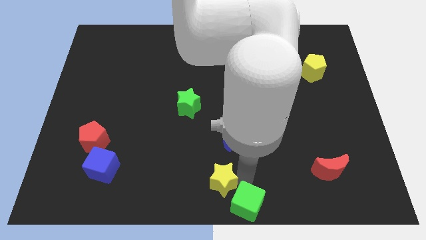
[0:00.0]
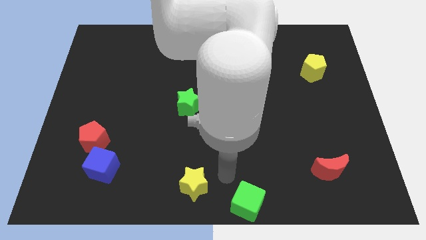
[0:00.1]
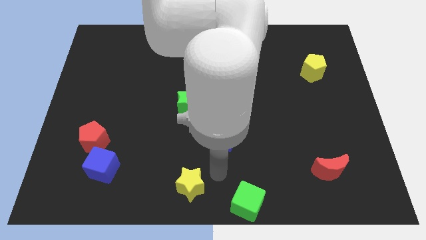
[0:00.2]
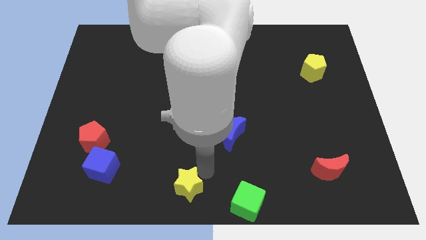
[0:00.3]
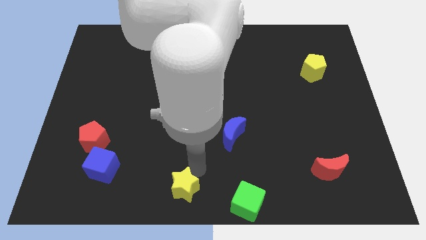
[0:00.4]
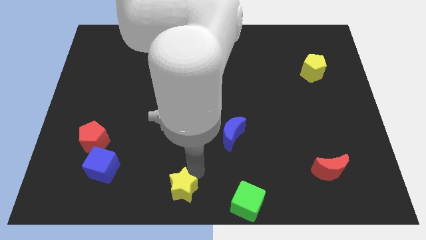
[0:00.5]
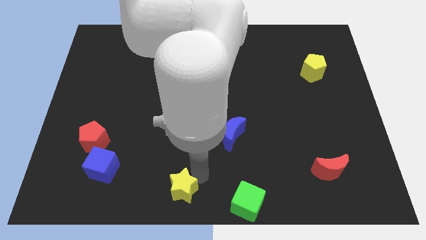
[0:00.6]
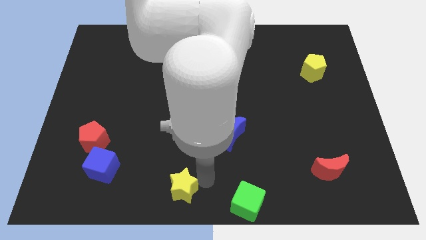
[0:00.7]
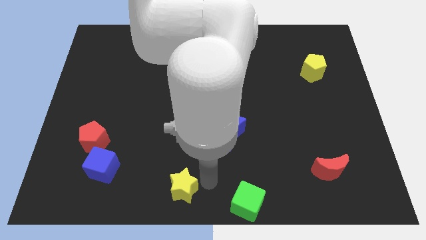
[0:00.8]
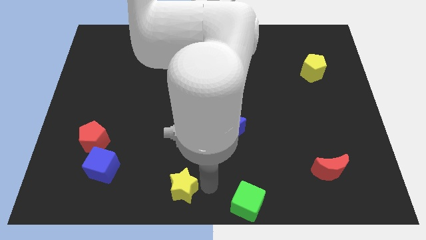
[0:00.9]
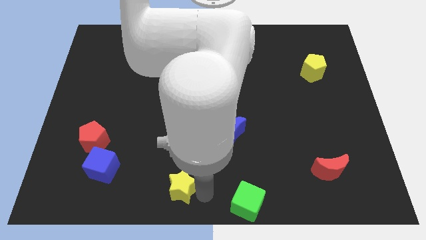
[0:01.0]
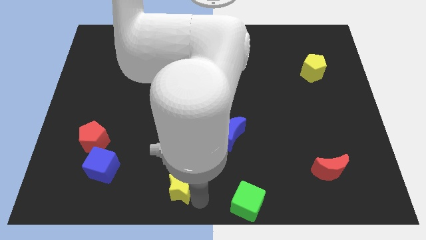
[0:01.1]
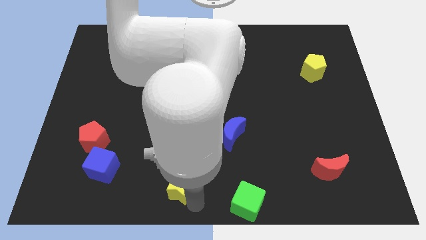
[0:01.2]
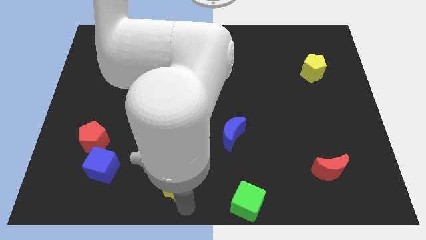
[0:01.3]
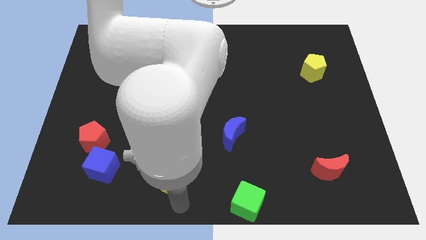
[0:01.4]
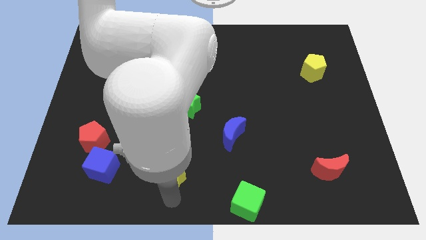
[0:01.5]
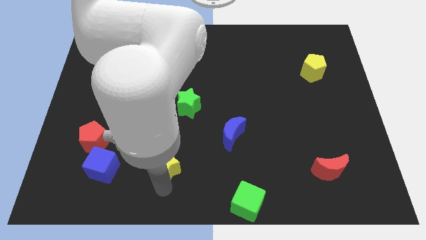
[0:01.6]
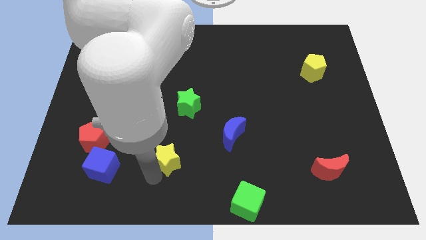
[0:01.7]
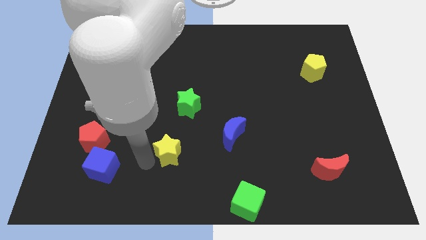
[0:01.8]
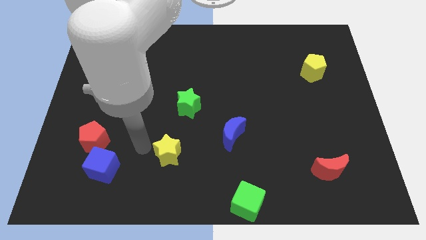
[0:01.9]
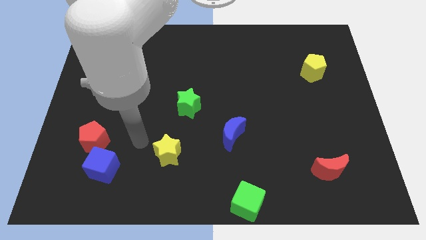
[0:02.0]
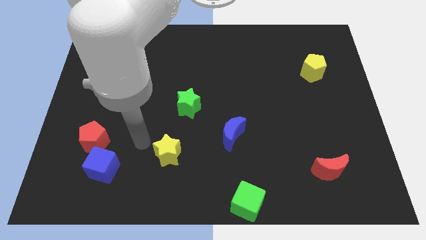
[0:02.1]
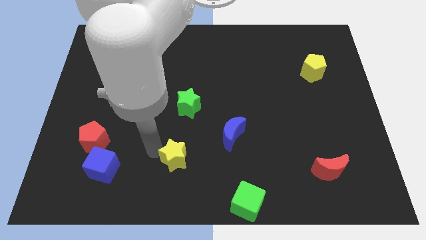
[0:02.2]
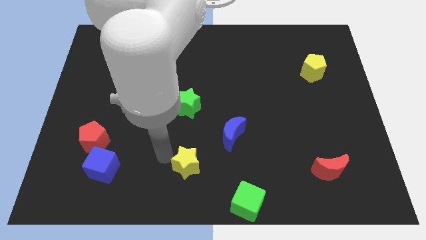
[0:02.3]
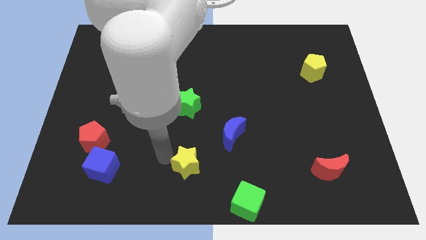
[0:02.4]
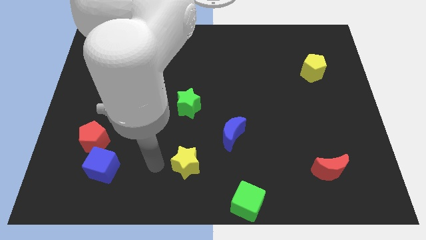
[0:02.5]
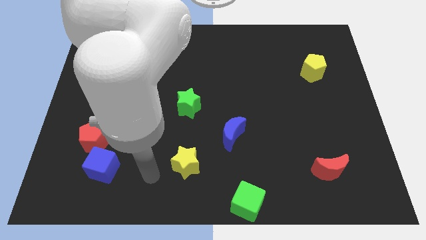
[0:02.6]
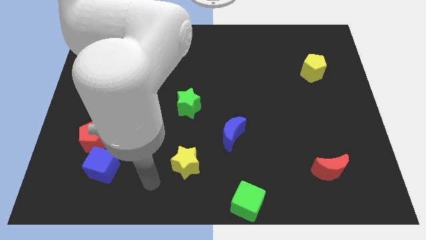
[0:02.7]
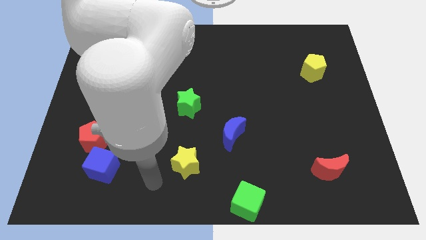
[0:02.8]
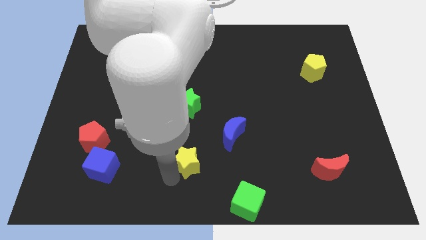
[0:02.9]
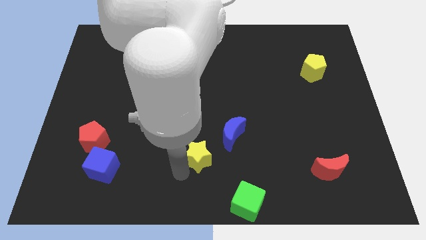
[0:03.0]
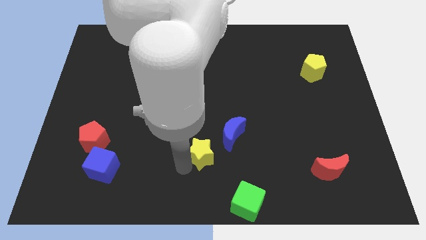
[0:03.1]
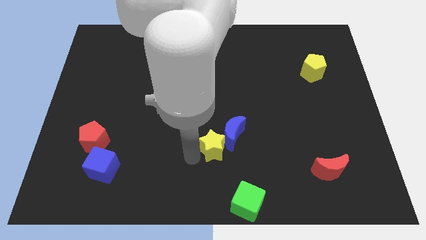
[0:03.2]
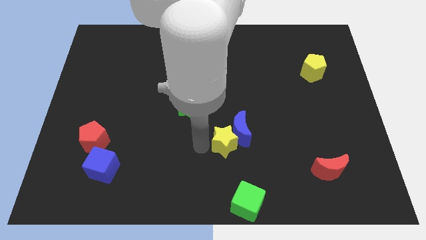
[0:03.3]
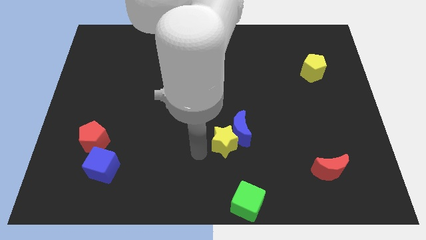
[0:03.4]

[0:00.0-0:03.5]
move the yellow star to the left of the blue crescent

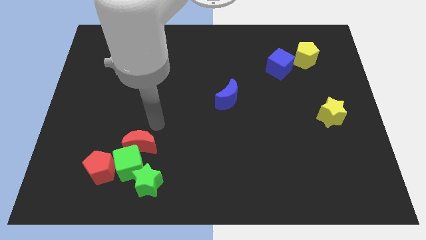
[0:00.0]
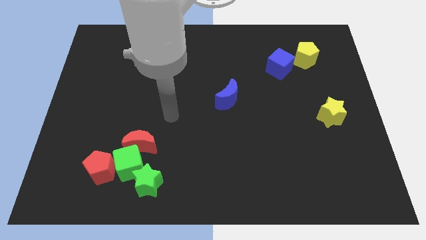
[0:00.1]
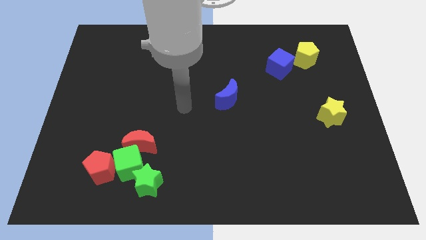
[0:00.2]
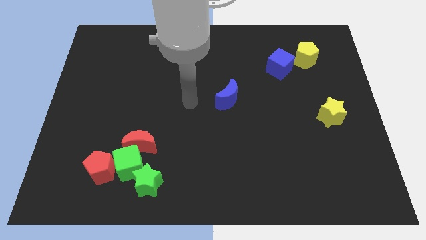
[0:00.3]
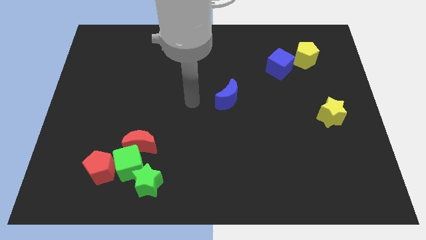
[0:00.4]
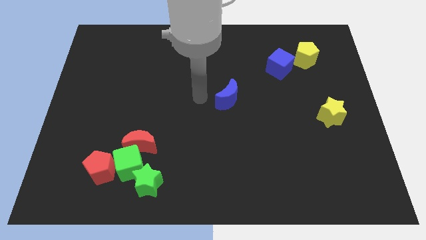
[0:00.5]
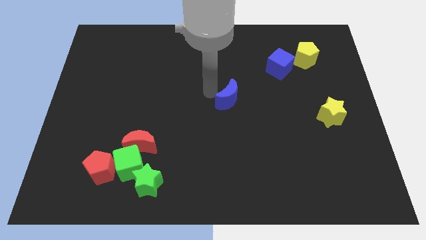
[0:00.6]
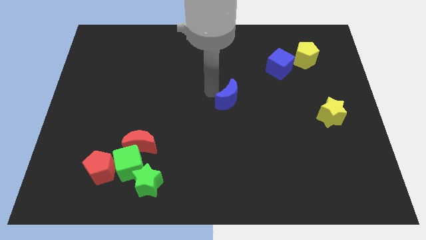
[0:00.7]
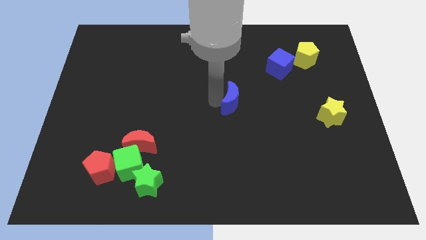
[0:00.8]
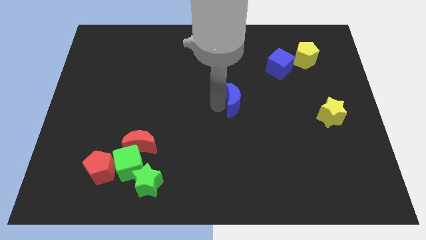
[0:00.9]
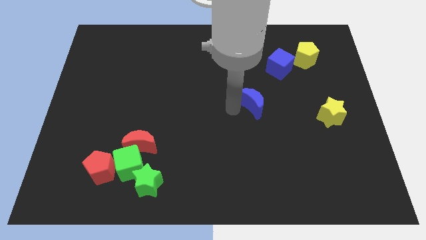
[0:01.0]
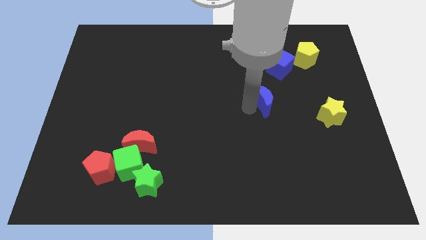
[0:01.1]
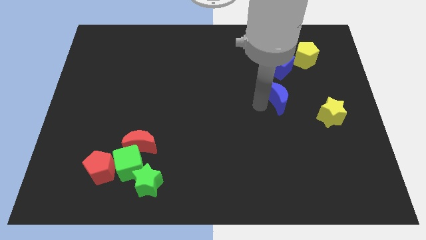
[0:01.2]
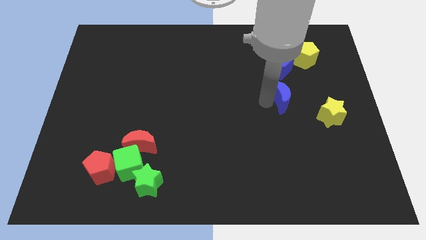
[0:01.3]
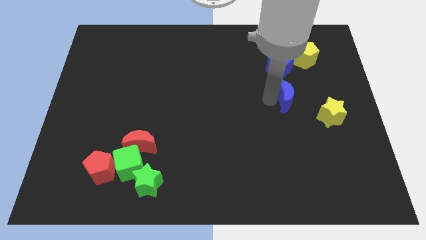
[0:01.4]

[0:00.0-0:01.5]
place the blue crescent under the blue cube

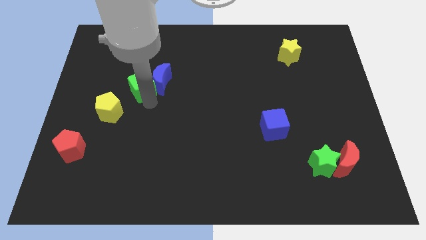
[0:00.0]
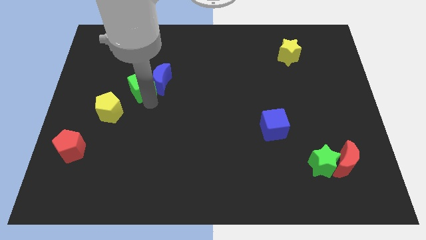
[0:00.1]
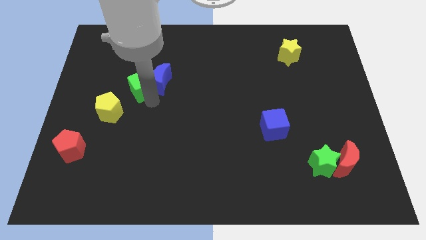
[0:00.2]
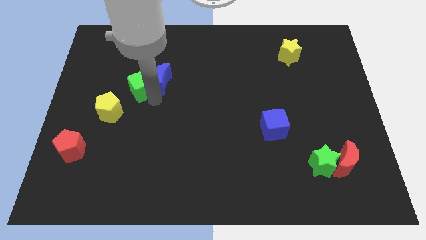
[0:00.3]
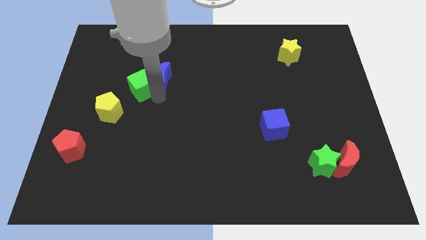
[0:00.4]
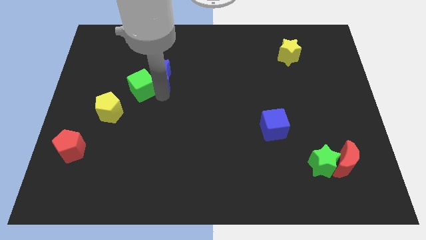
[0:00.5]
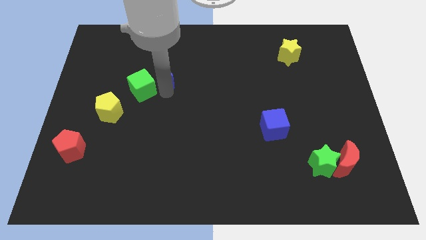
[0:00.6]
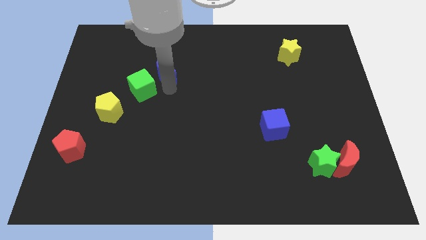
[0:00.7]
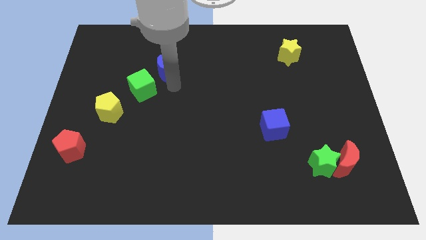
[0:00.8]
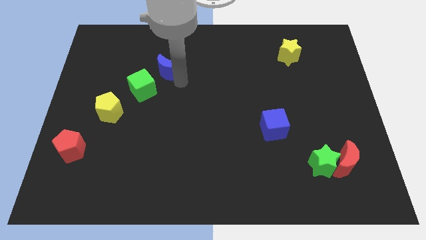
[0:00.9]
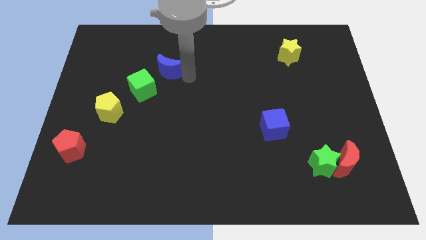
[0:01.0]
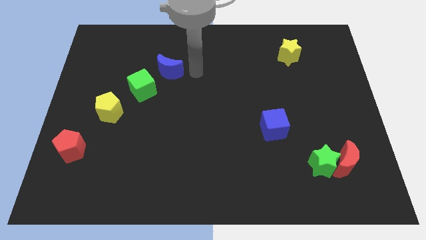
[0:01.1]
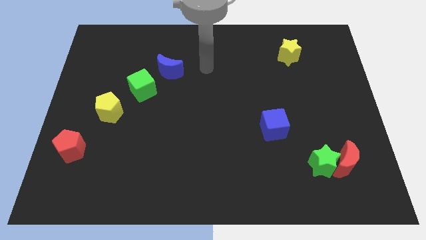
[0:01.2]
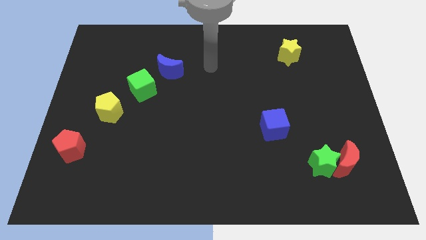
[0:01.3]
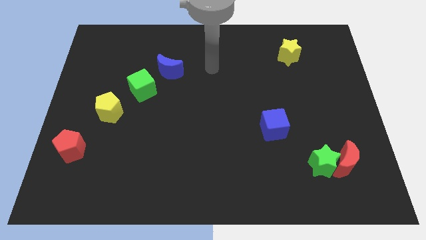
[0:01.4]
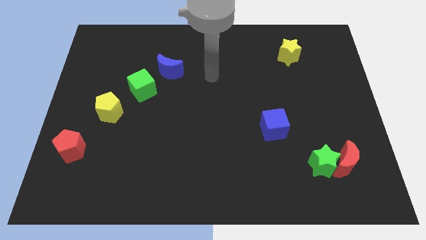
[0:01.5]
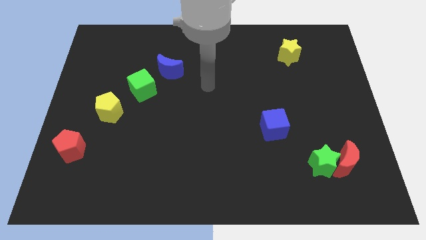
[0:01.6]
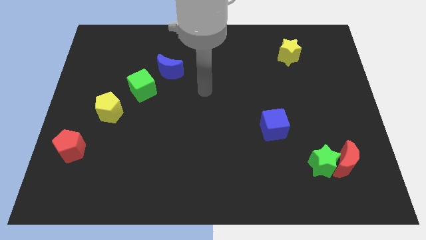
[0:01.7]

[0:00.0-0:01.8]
slightly push the blue moon away from the green cube

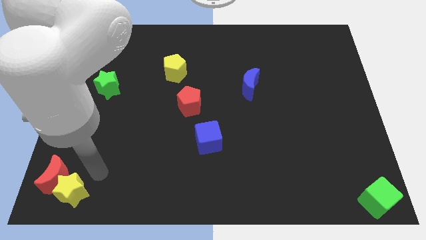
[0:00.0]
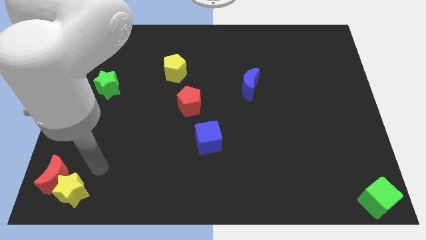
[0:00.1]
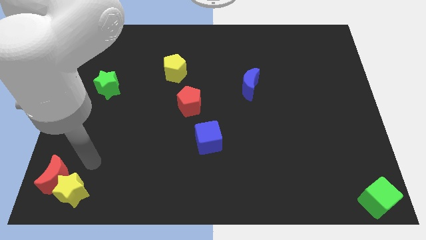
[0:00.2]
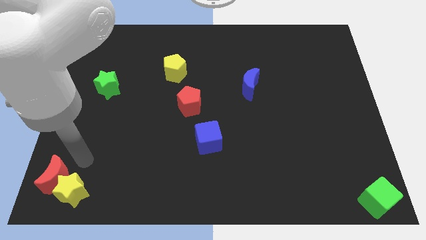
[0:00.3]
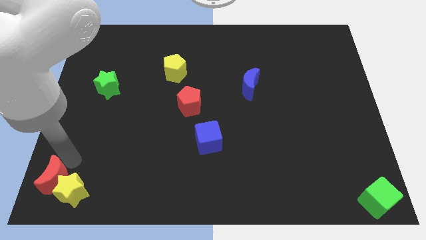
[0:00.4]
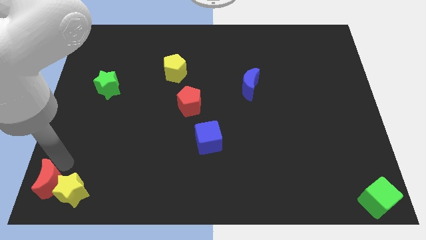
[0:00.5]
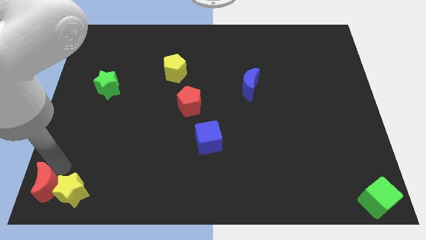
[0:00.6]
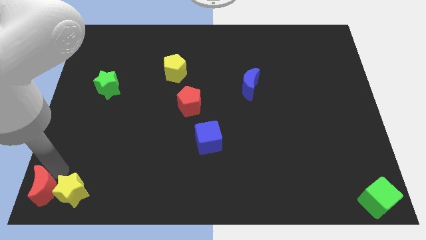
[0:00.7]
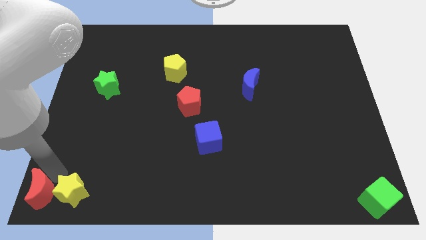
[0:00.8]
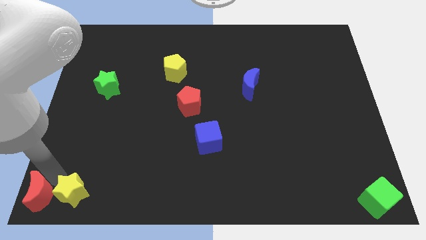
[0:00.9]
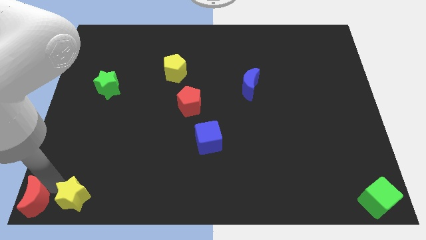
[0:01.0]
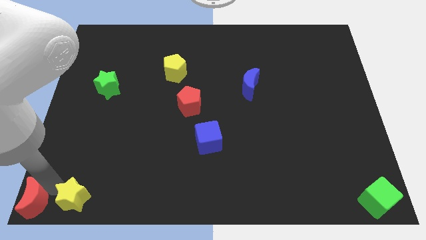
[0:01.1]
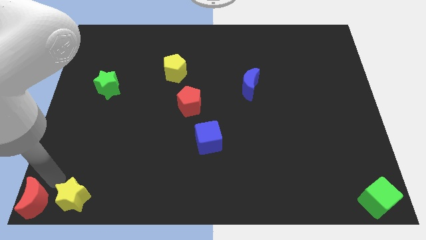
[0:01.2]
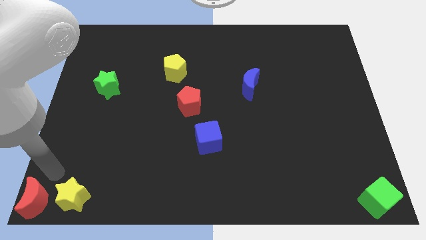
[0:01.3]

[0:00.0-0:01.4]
push the red crescent towards the bottom left corner of the board

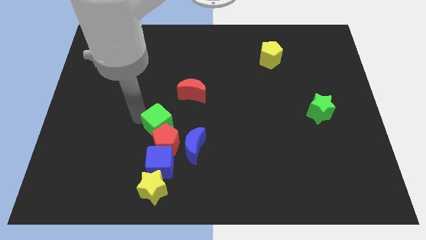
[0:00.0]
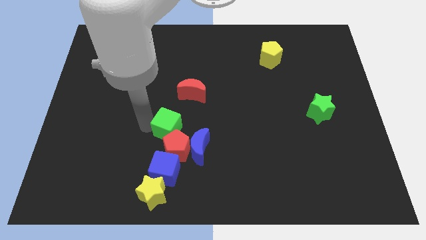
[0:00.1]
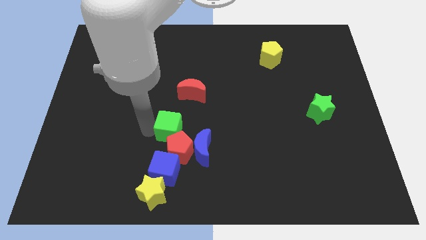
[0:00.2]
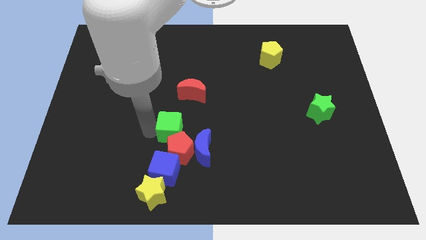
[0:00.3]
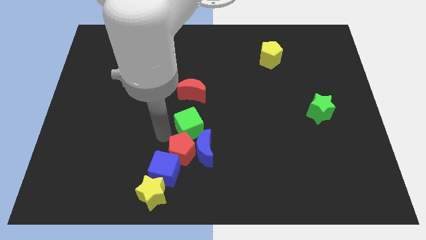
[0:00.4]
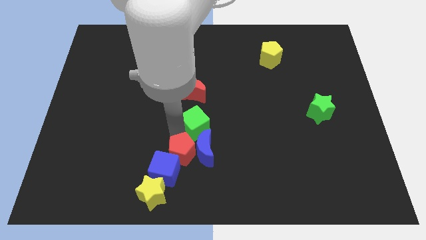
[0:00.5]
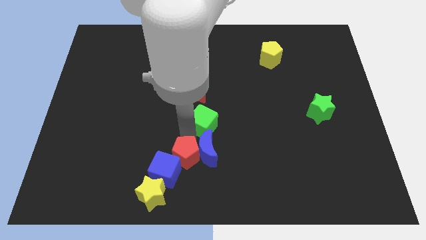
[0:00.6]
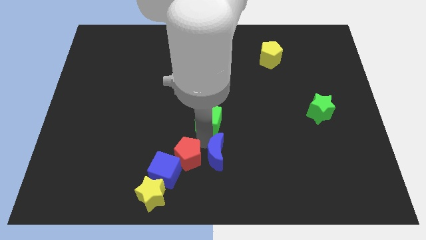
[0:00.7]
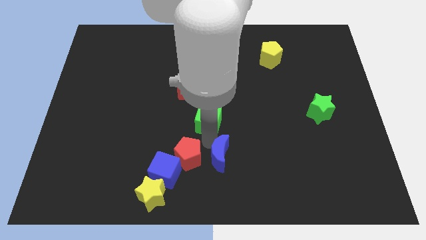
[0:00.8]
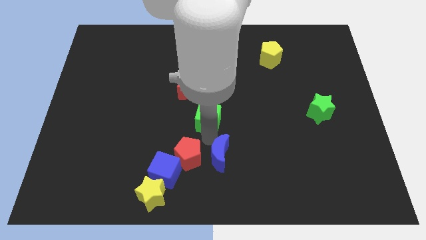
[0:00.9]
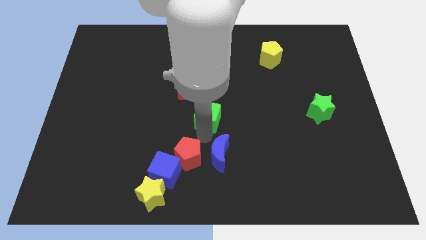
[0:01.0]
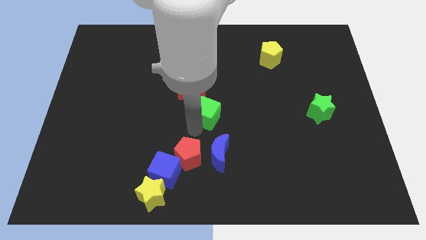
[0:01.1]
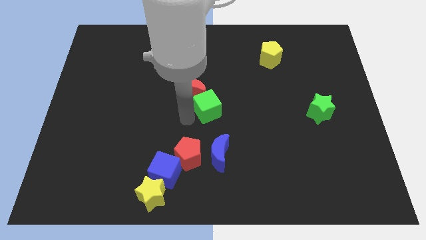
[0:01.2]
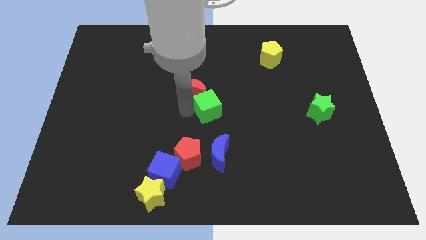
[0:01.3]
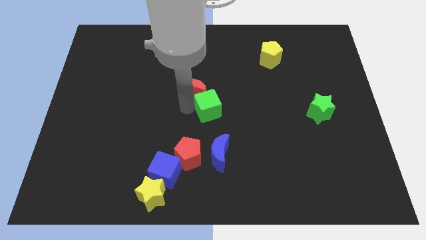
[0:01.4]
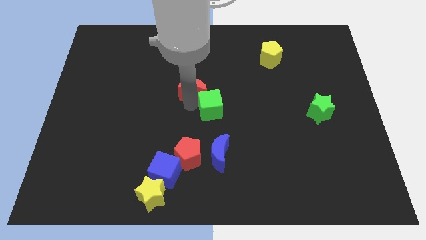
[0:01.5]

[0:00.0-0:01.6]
separate green and red pentagon
